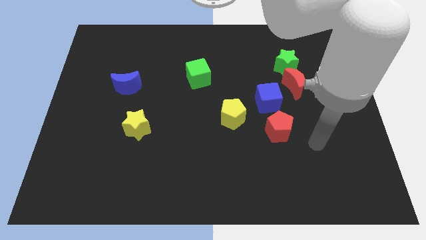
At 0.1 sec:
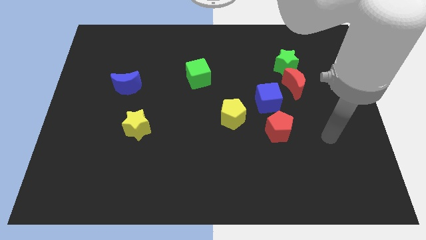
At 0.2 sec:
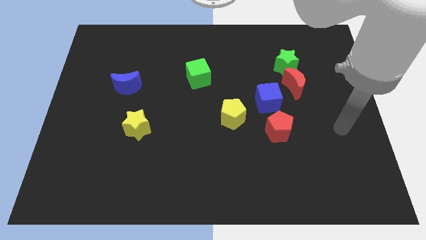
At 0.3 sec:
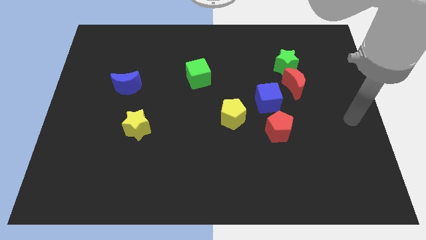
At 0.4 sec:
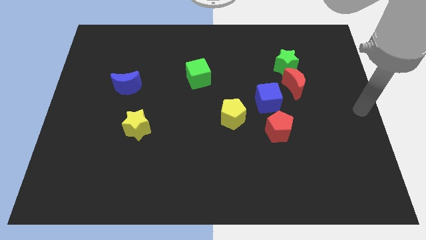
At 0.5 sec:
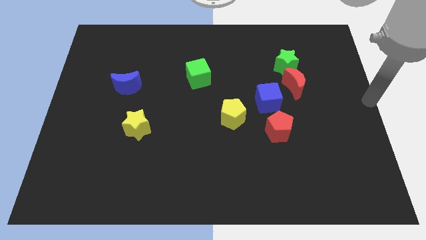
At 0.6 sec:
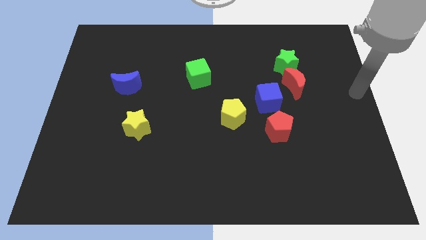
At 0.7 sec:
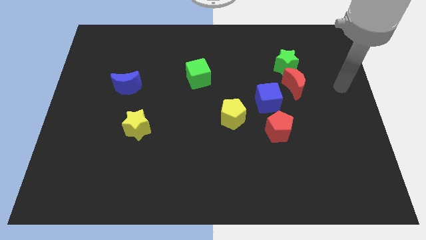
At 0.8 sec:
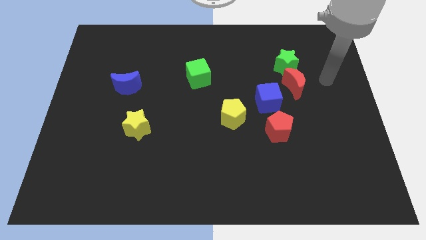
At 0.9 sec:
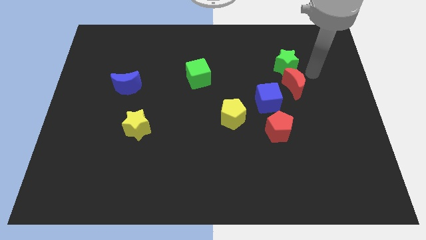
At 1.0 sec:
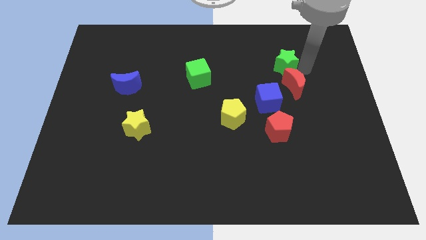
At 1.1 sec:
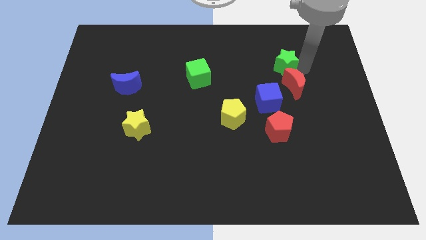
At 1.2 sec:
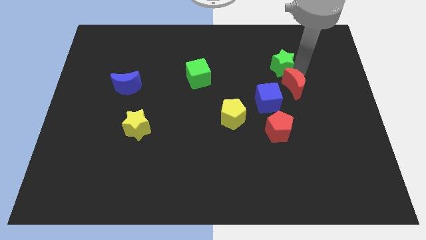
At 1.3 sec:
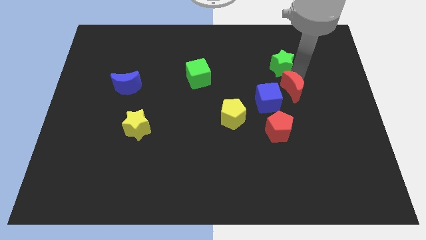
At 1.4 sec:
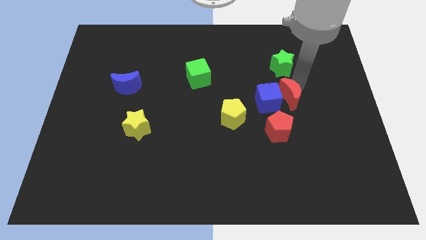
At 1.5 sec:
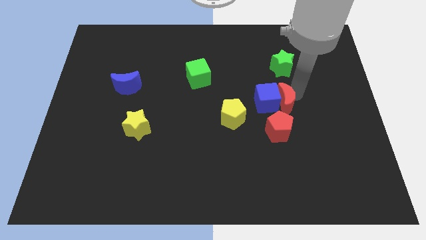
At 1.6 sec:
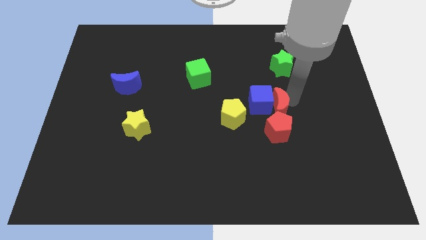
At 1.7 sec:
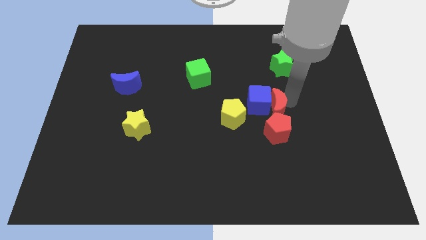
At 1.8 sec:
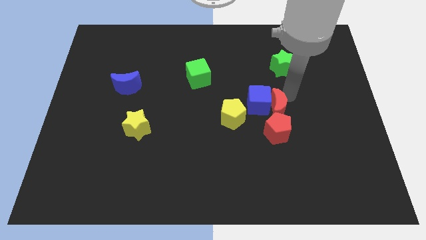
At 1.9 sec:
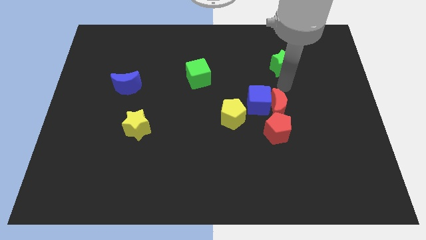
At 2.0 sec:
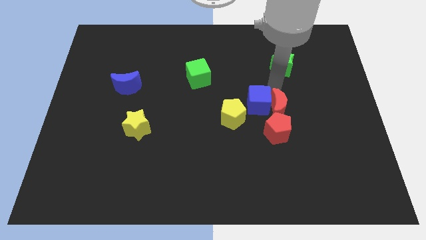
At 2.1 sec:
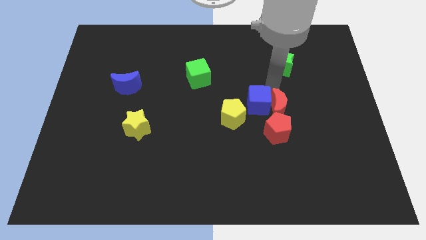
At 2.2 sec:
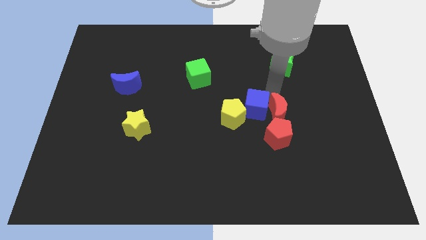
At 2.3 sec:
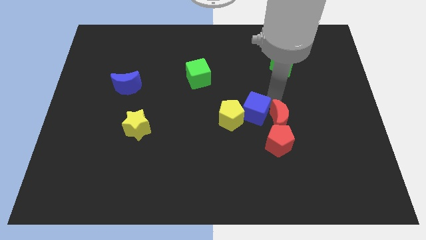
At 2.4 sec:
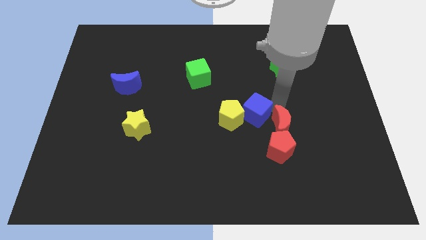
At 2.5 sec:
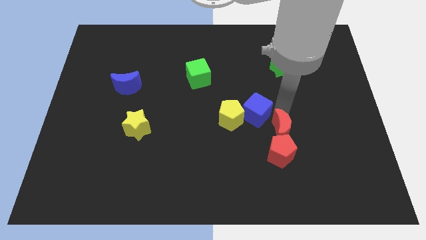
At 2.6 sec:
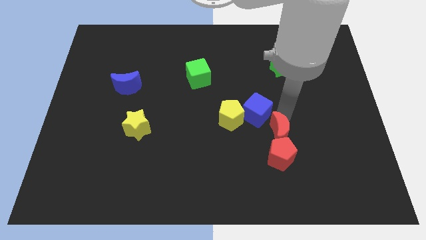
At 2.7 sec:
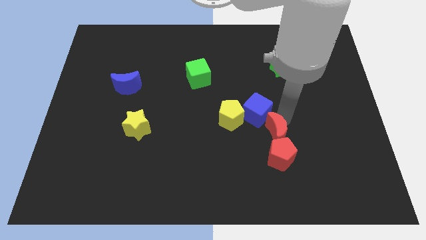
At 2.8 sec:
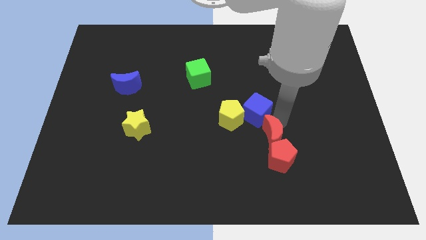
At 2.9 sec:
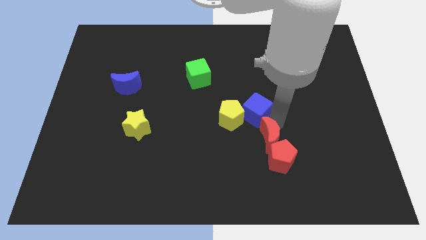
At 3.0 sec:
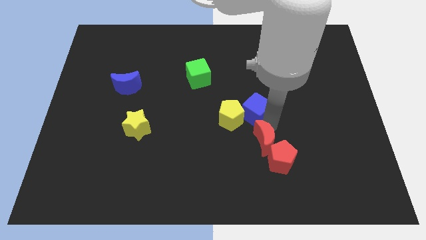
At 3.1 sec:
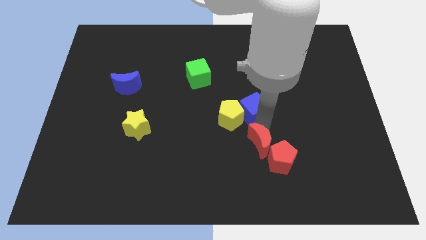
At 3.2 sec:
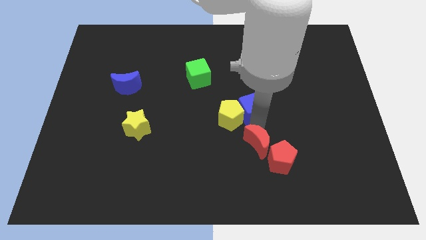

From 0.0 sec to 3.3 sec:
push the red crescent to the bottom of the blue cube

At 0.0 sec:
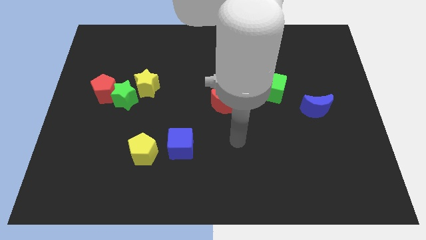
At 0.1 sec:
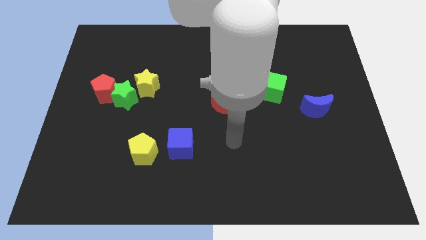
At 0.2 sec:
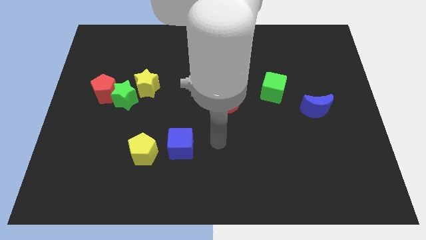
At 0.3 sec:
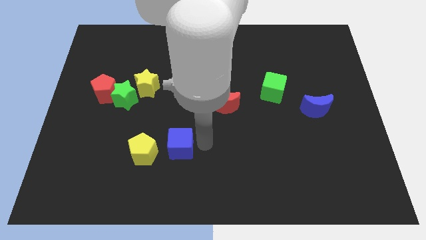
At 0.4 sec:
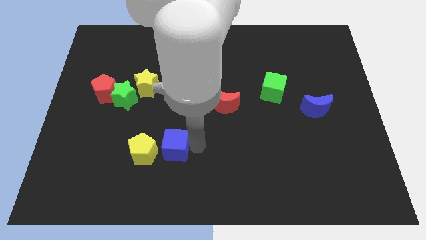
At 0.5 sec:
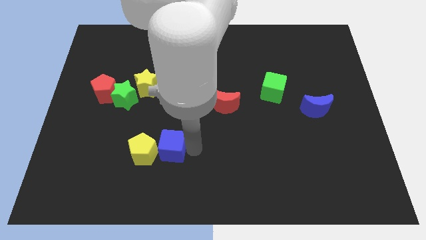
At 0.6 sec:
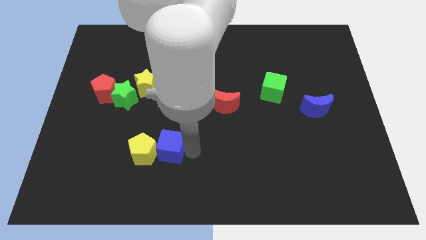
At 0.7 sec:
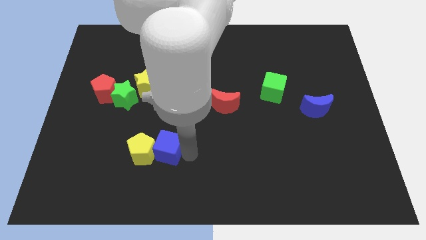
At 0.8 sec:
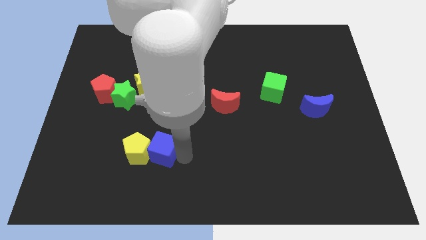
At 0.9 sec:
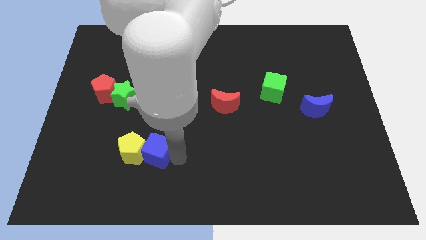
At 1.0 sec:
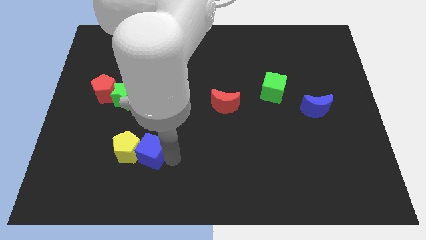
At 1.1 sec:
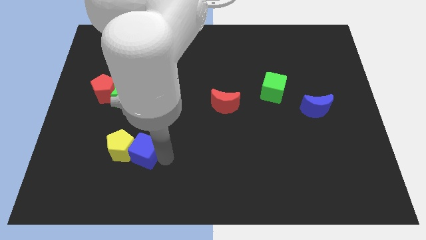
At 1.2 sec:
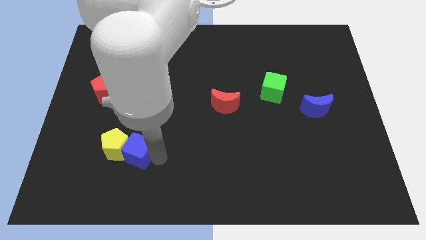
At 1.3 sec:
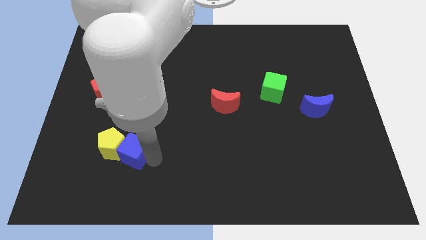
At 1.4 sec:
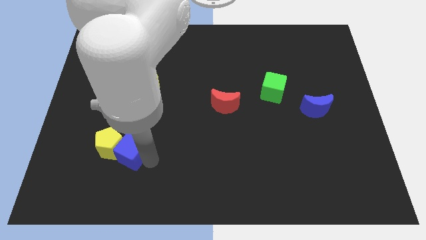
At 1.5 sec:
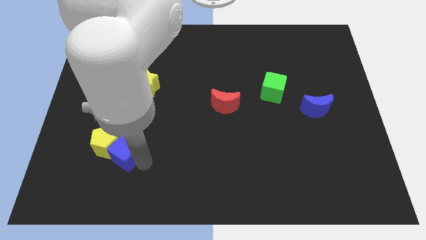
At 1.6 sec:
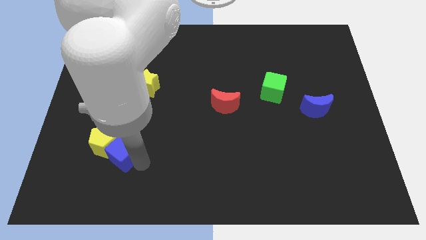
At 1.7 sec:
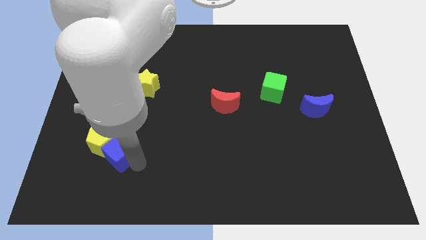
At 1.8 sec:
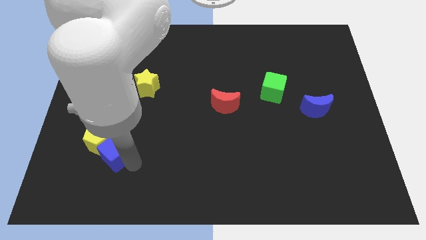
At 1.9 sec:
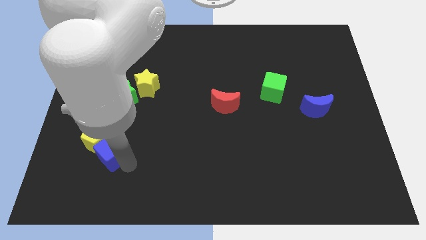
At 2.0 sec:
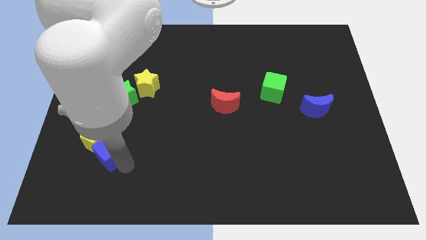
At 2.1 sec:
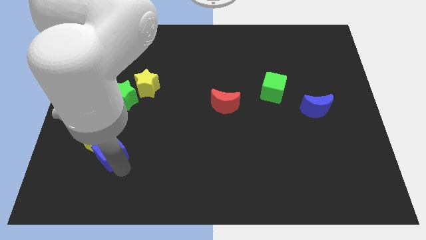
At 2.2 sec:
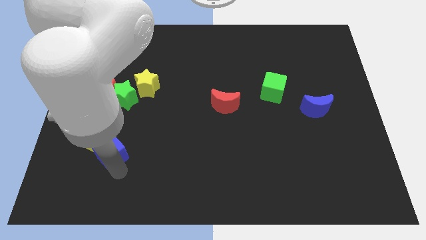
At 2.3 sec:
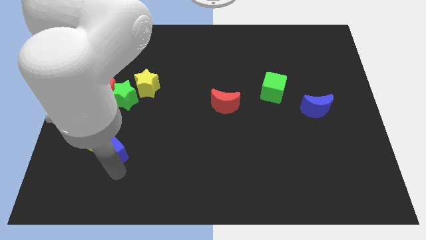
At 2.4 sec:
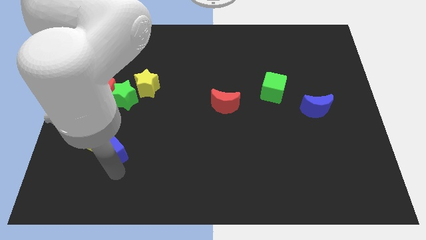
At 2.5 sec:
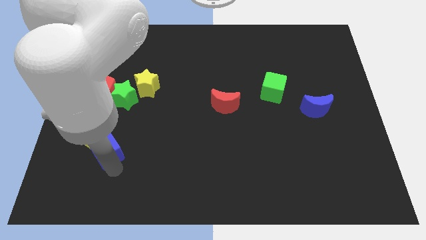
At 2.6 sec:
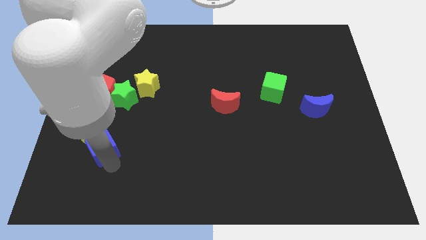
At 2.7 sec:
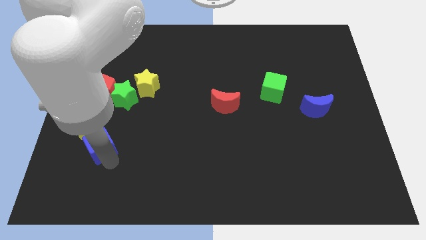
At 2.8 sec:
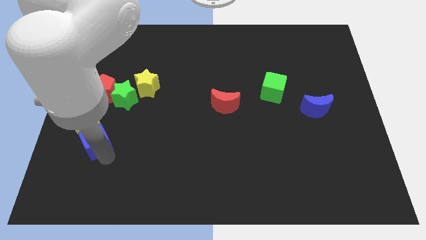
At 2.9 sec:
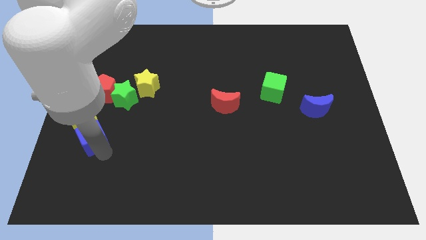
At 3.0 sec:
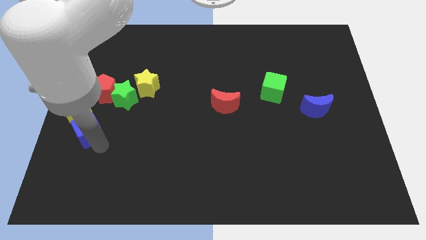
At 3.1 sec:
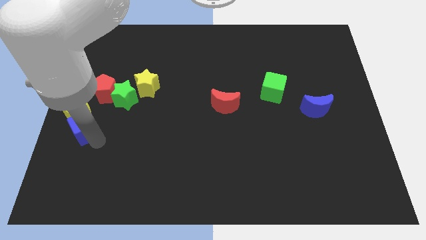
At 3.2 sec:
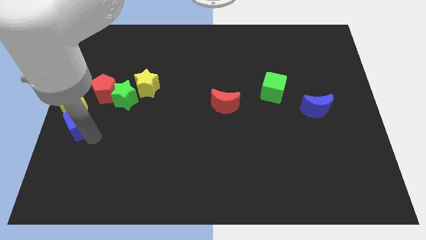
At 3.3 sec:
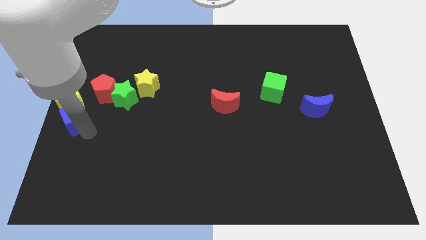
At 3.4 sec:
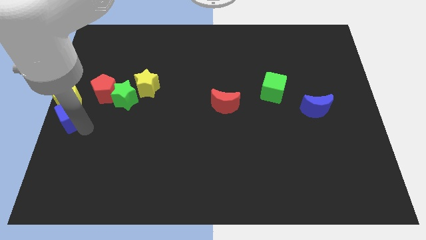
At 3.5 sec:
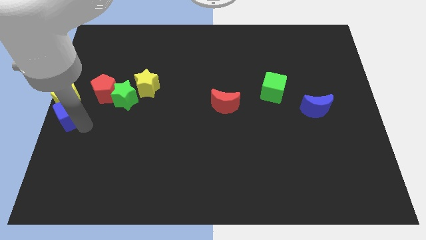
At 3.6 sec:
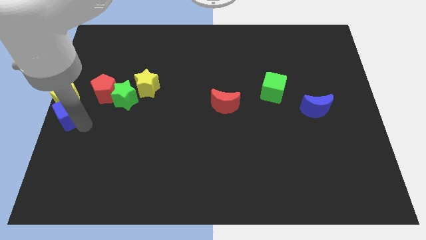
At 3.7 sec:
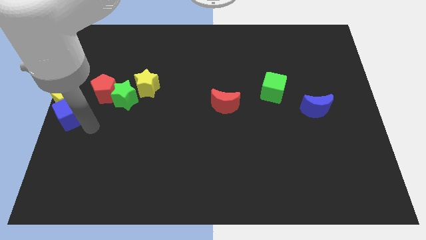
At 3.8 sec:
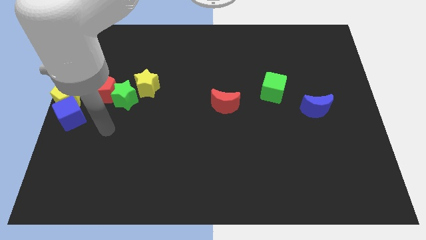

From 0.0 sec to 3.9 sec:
move blue cube along with yellow pentagon to the center left

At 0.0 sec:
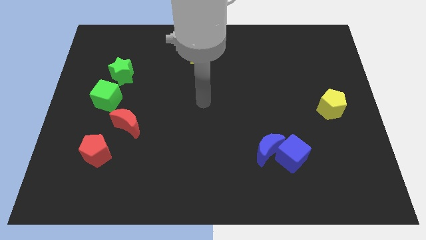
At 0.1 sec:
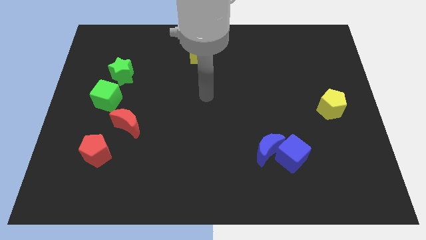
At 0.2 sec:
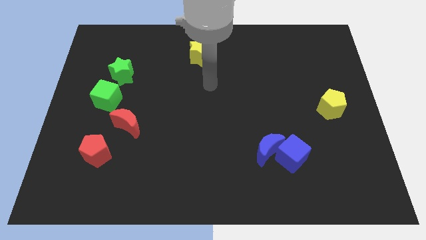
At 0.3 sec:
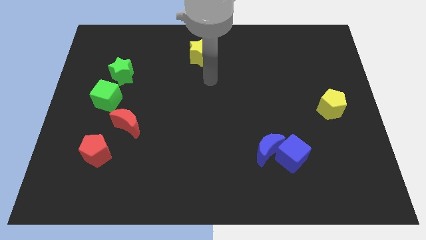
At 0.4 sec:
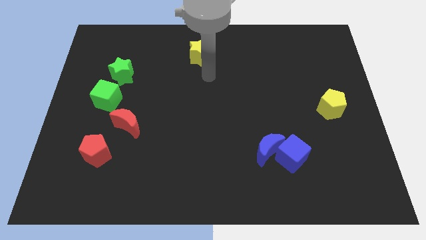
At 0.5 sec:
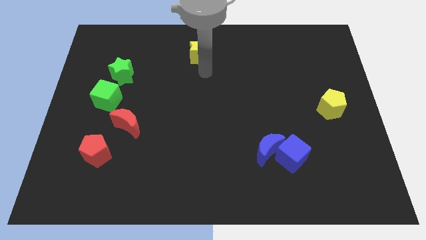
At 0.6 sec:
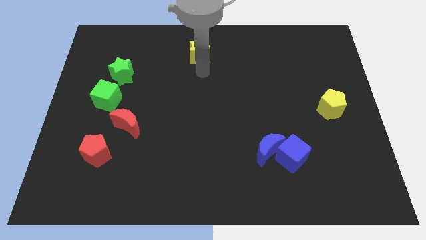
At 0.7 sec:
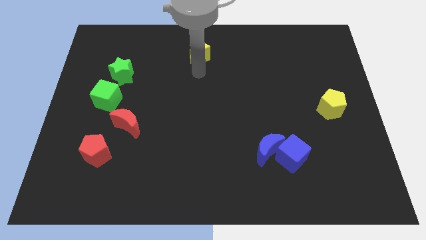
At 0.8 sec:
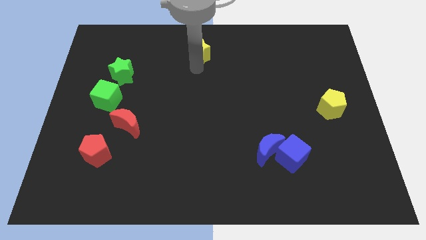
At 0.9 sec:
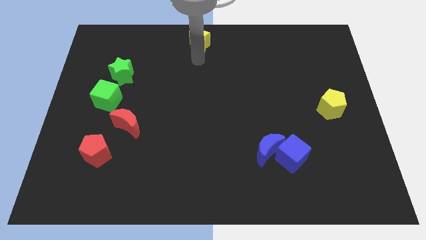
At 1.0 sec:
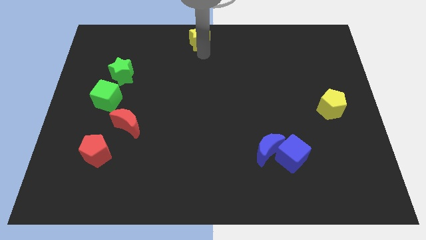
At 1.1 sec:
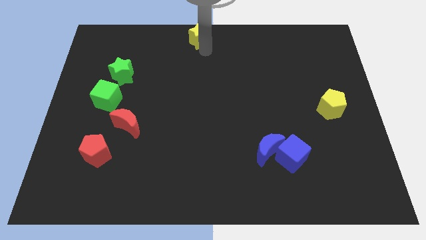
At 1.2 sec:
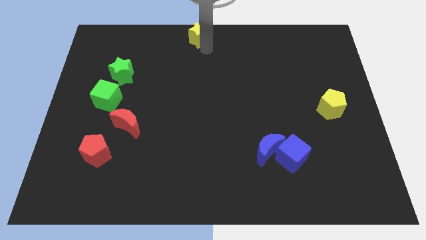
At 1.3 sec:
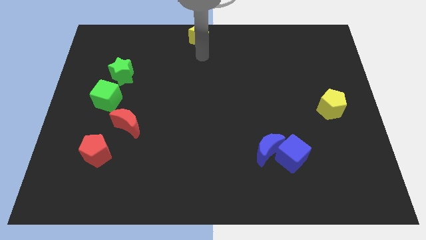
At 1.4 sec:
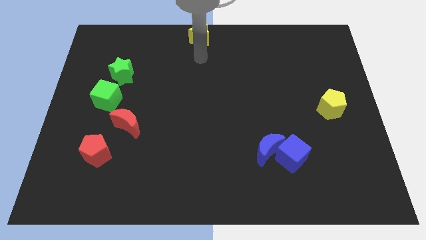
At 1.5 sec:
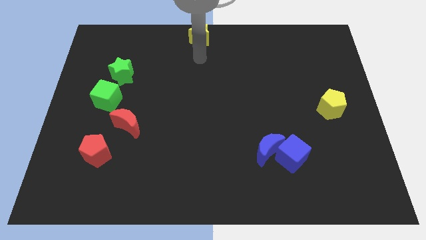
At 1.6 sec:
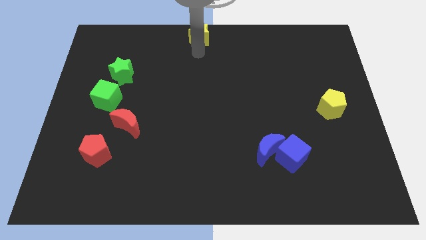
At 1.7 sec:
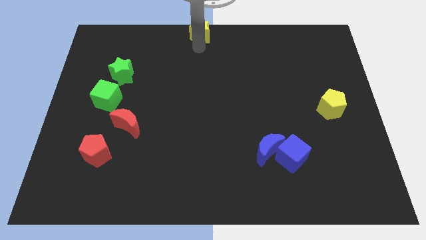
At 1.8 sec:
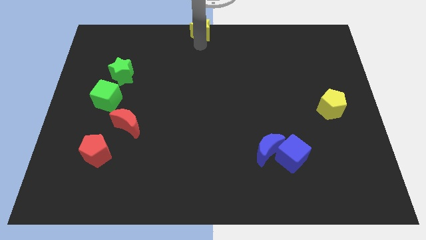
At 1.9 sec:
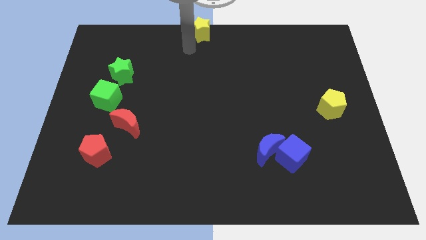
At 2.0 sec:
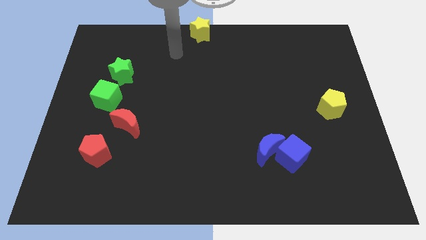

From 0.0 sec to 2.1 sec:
push the yellow star to the top center
